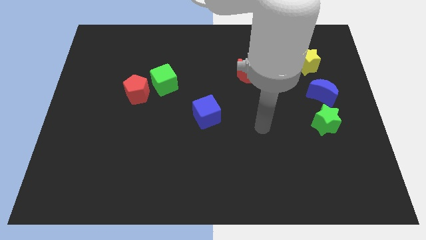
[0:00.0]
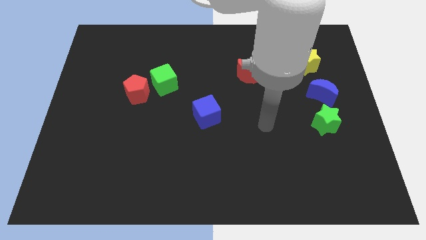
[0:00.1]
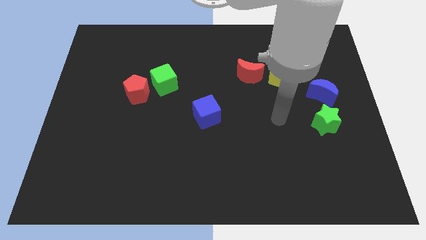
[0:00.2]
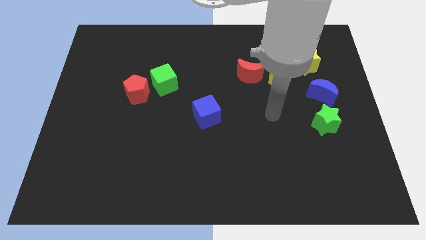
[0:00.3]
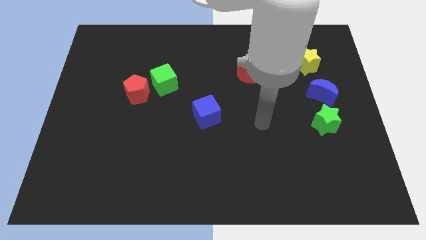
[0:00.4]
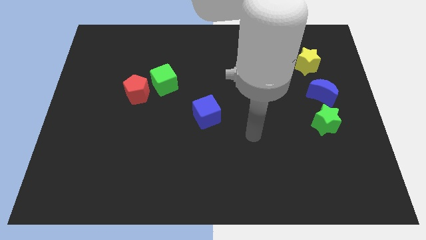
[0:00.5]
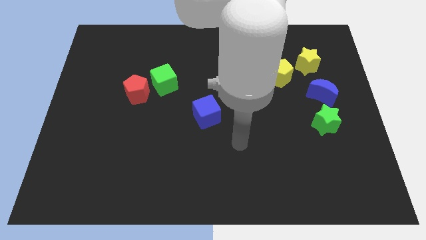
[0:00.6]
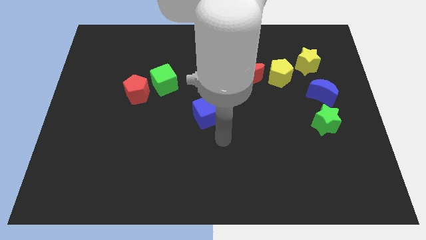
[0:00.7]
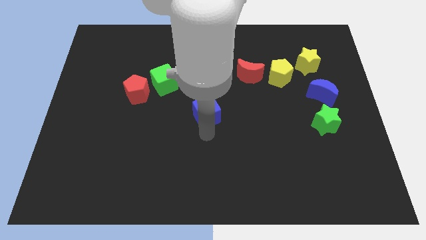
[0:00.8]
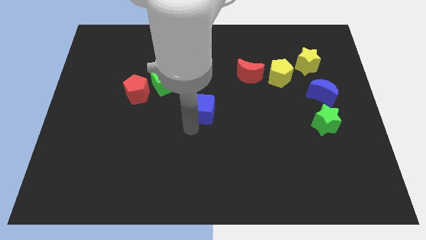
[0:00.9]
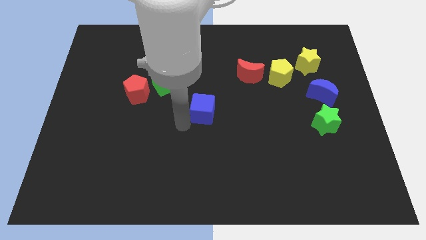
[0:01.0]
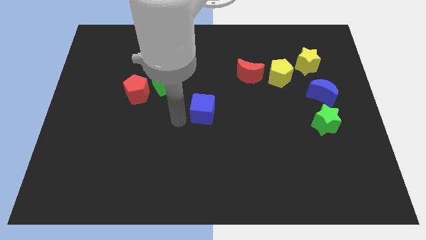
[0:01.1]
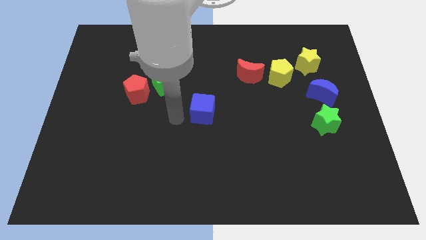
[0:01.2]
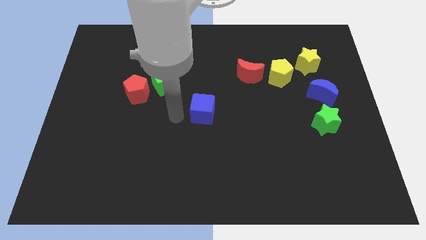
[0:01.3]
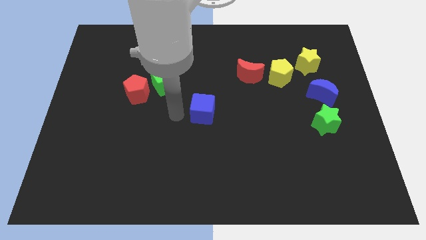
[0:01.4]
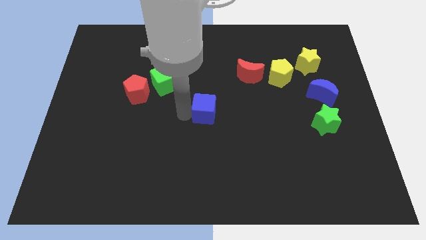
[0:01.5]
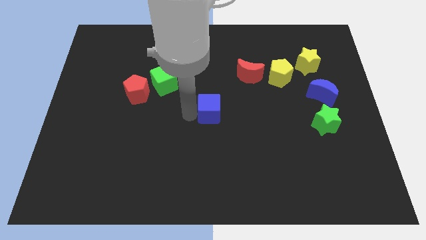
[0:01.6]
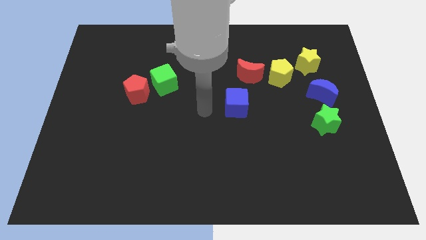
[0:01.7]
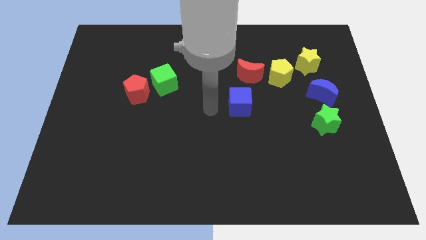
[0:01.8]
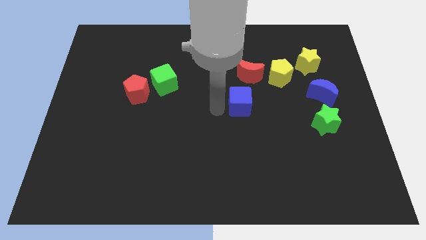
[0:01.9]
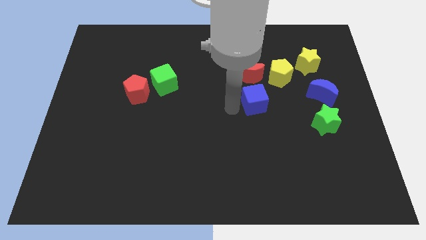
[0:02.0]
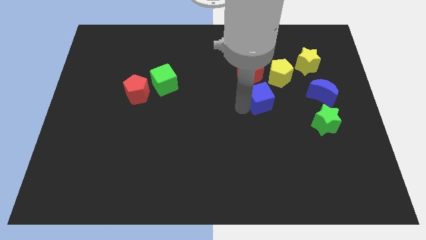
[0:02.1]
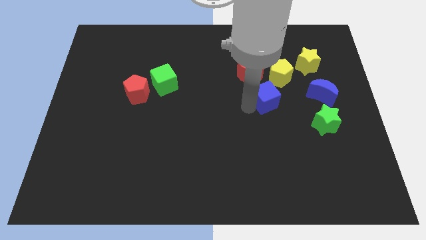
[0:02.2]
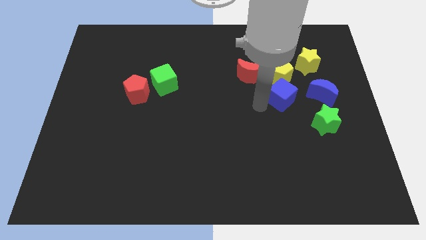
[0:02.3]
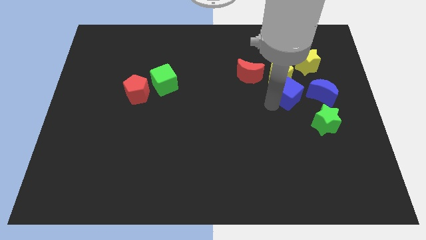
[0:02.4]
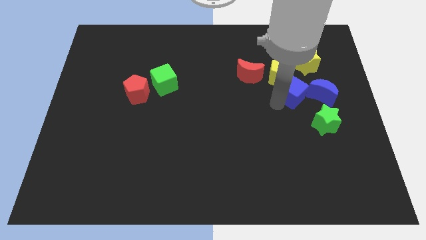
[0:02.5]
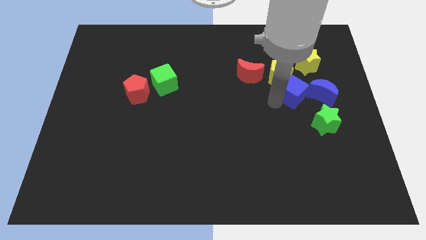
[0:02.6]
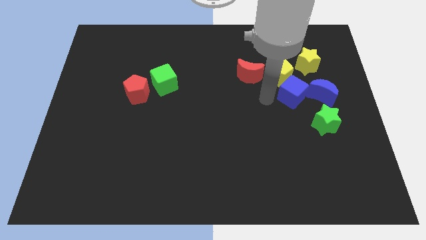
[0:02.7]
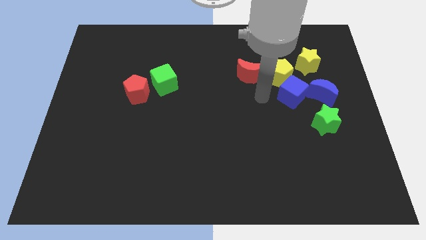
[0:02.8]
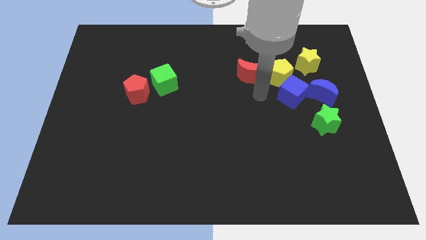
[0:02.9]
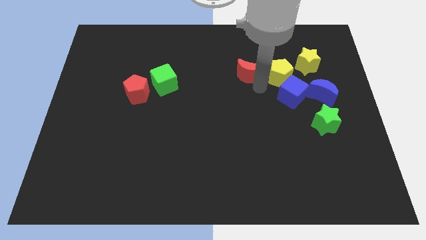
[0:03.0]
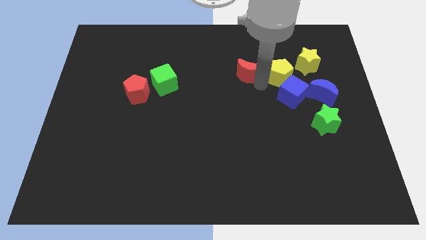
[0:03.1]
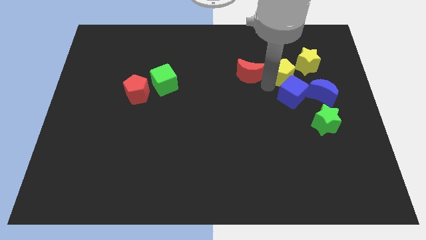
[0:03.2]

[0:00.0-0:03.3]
push the blue cube to the left of the blue crescent

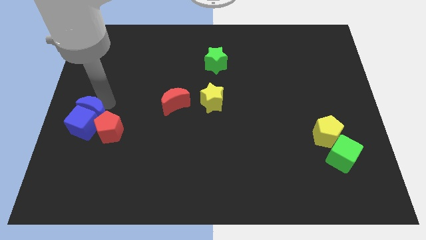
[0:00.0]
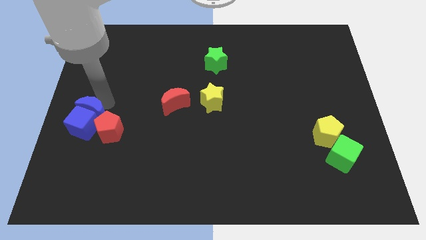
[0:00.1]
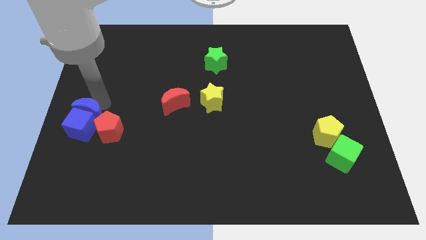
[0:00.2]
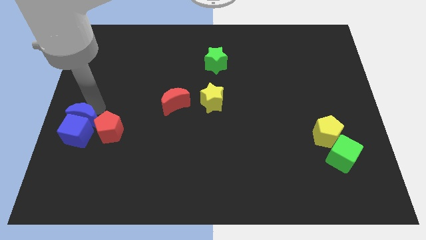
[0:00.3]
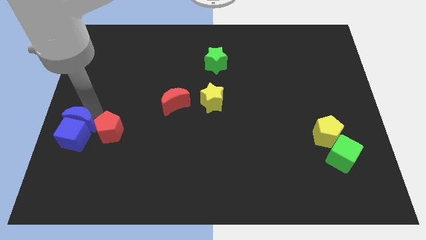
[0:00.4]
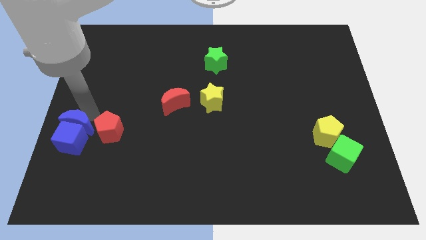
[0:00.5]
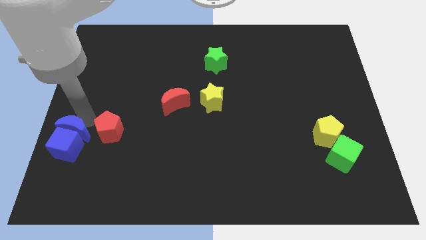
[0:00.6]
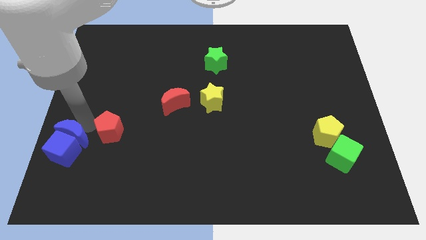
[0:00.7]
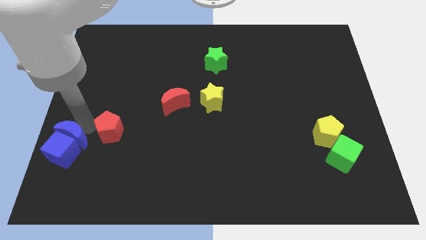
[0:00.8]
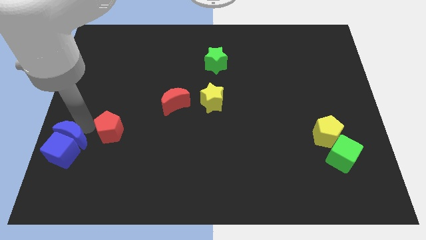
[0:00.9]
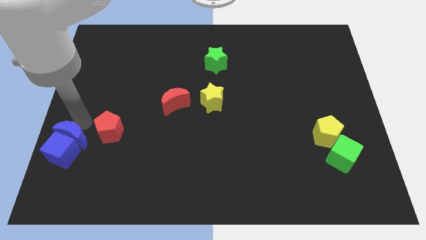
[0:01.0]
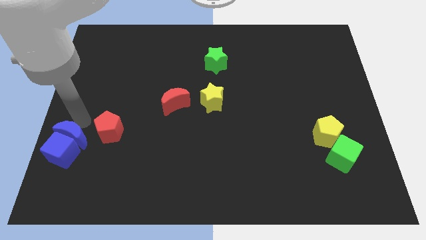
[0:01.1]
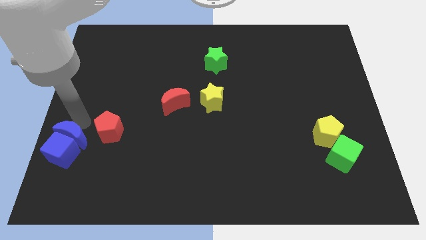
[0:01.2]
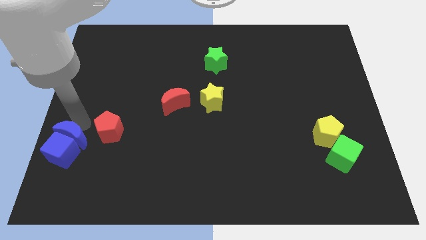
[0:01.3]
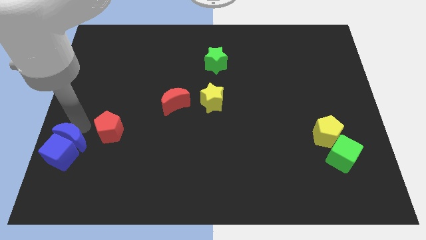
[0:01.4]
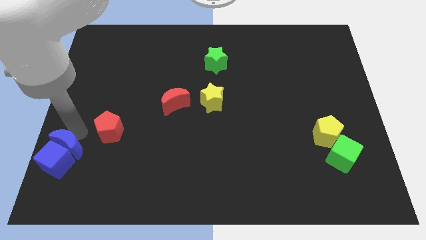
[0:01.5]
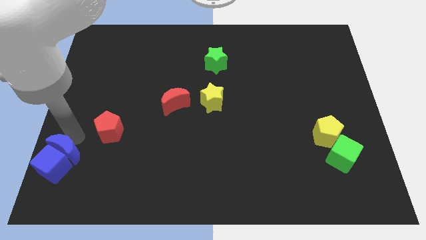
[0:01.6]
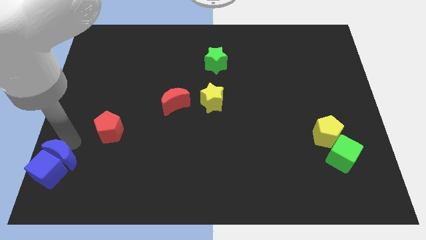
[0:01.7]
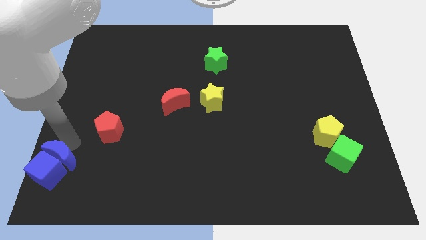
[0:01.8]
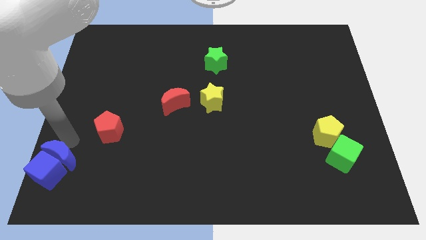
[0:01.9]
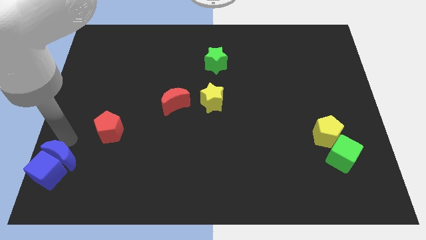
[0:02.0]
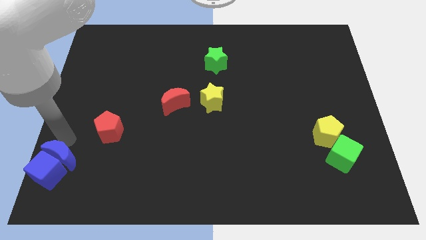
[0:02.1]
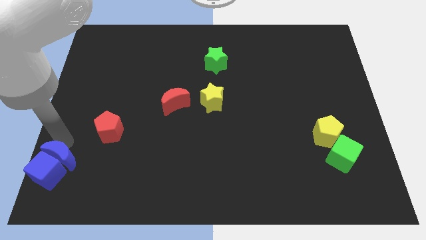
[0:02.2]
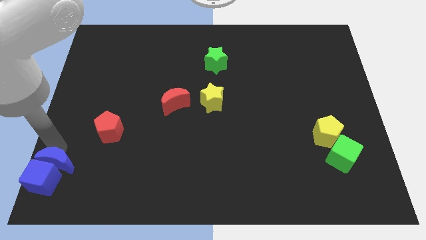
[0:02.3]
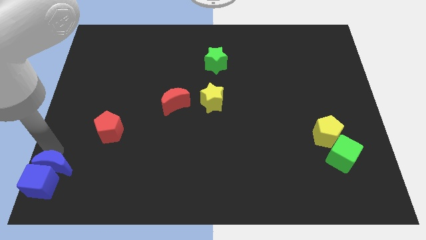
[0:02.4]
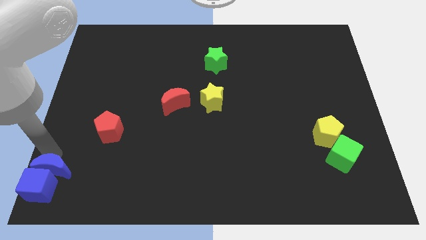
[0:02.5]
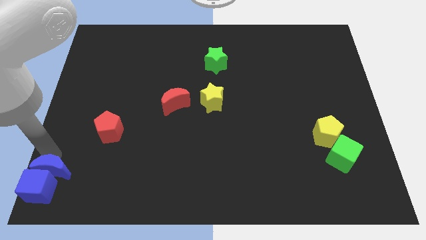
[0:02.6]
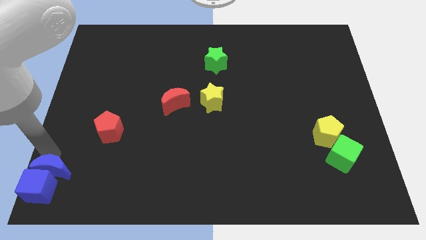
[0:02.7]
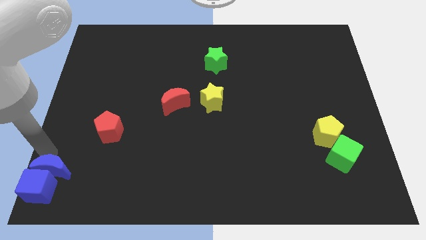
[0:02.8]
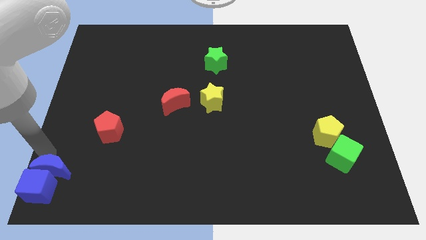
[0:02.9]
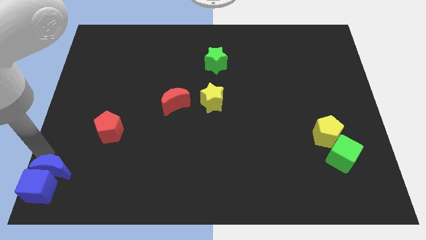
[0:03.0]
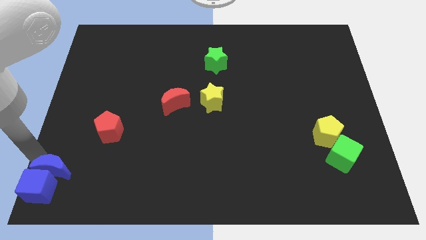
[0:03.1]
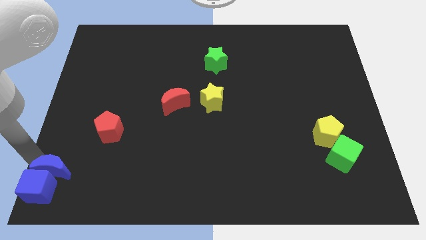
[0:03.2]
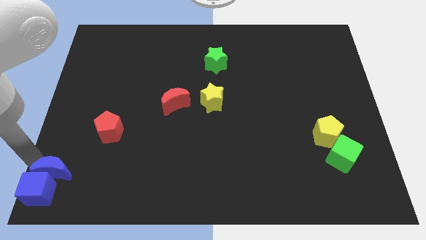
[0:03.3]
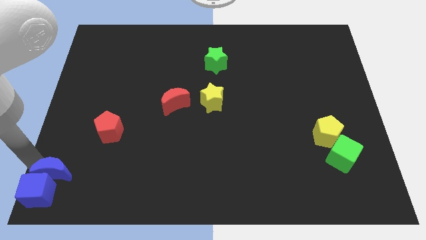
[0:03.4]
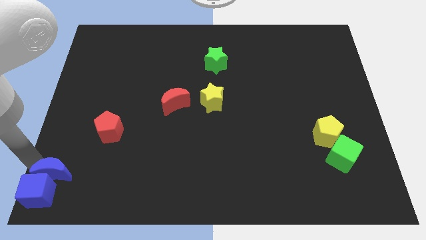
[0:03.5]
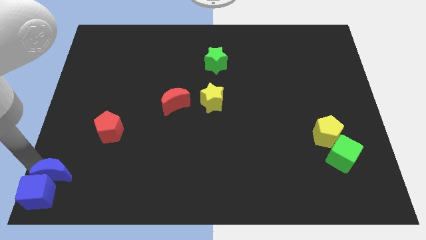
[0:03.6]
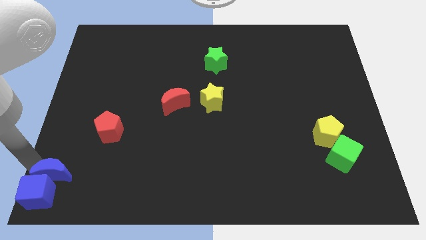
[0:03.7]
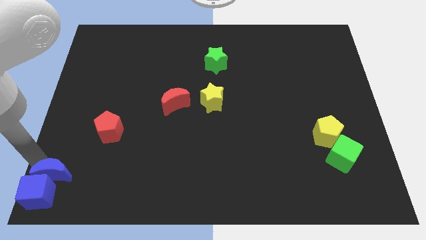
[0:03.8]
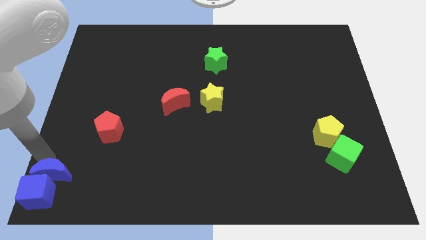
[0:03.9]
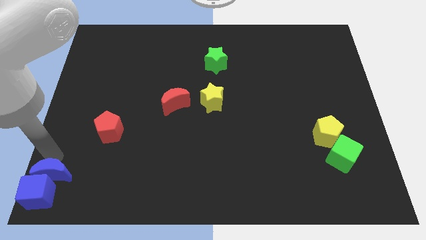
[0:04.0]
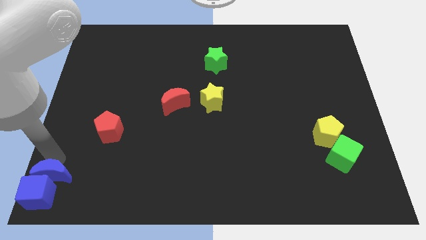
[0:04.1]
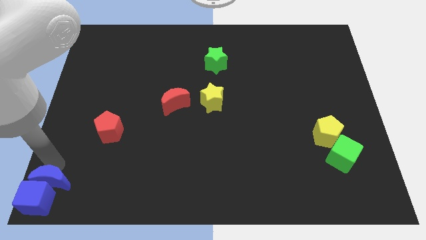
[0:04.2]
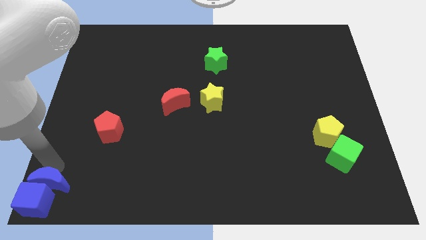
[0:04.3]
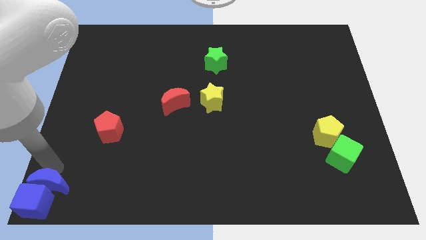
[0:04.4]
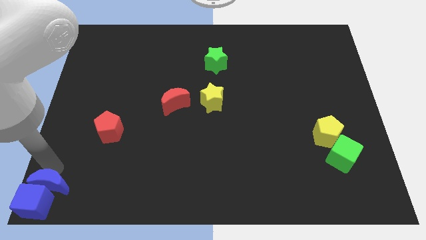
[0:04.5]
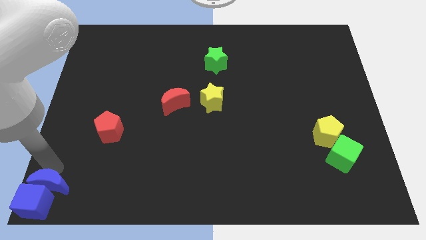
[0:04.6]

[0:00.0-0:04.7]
move both the blue blocks to the bottom left corner of the board

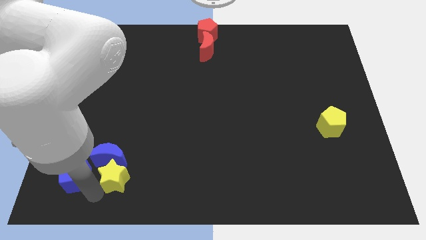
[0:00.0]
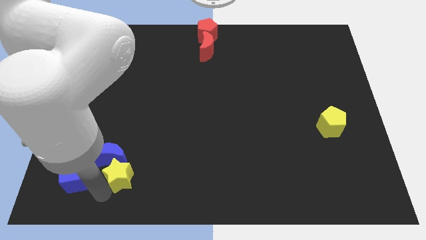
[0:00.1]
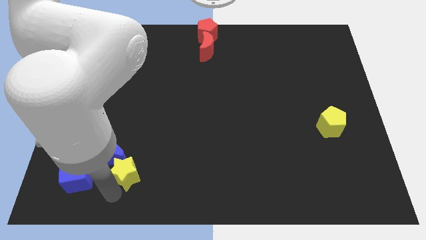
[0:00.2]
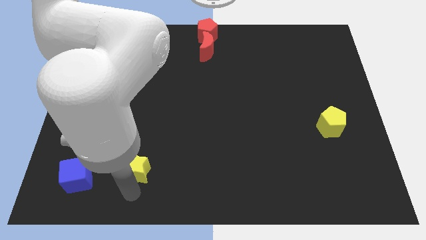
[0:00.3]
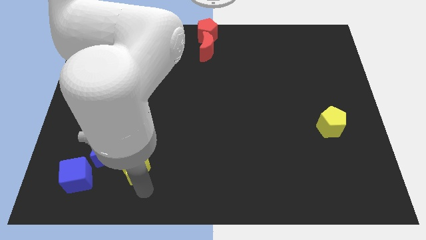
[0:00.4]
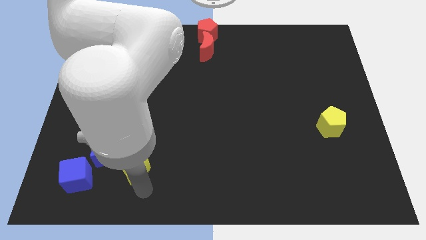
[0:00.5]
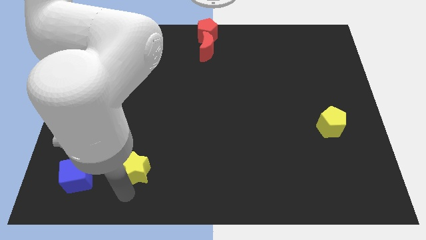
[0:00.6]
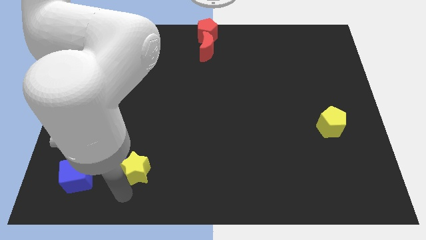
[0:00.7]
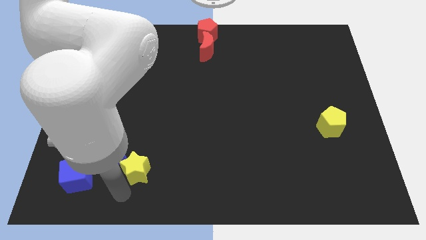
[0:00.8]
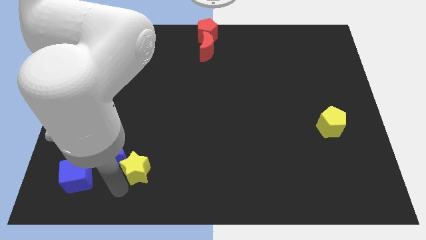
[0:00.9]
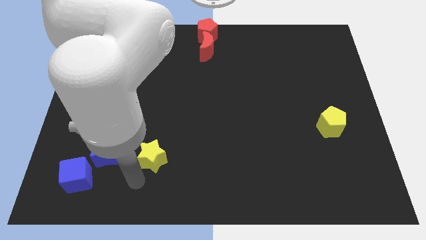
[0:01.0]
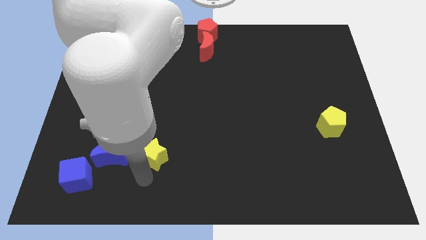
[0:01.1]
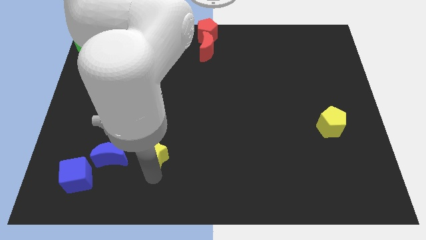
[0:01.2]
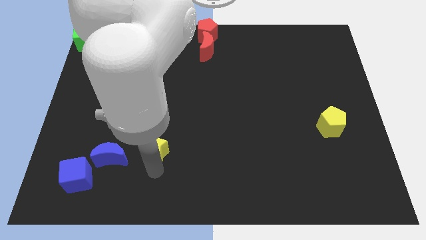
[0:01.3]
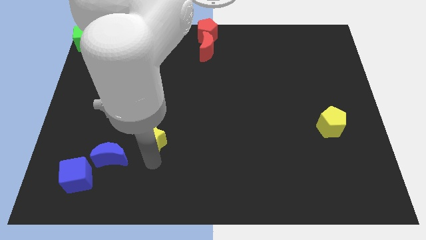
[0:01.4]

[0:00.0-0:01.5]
separate yellow star from the blue moon
